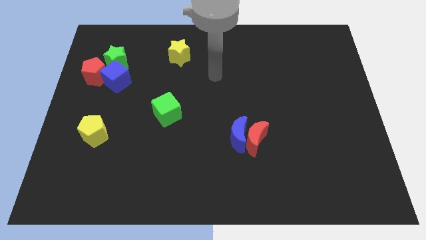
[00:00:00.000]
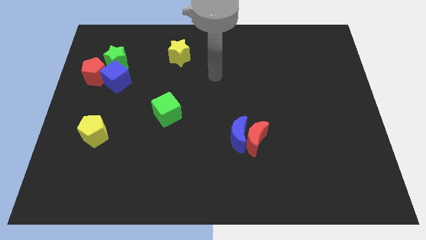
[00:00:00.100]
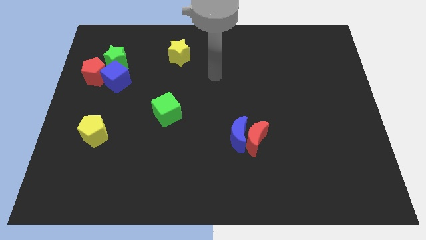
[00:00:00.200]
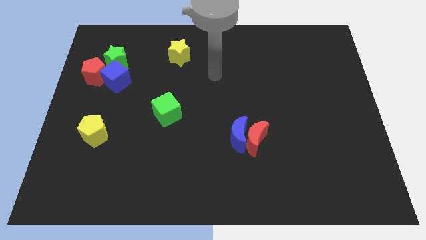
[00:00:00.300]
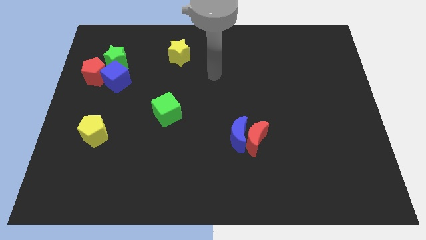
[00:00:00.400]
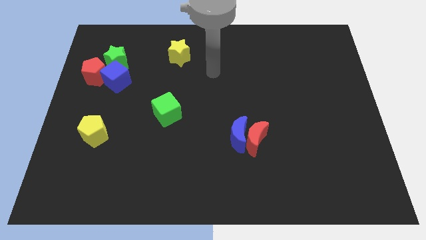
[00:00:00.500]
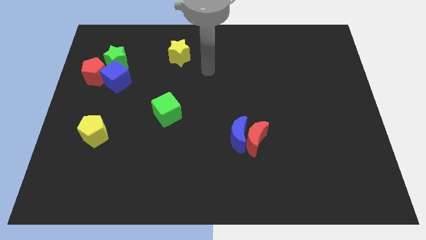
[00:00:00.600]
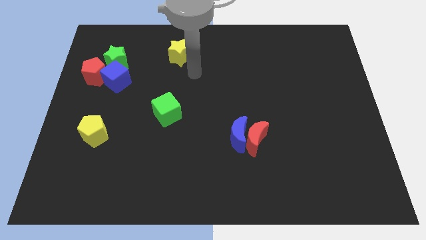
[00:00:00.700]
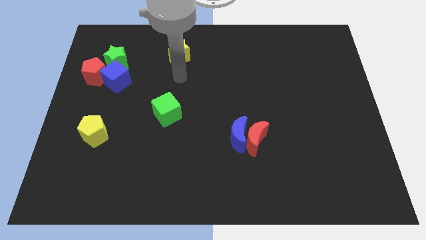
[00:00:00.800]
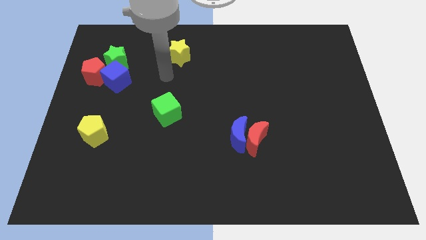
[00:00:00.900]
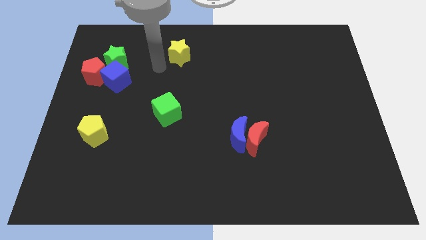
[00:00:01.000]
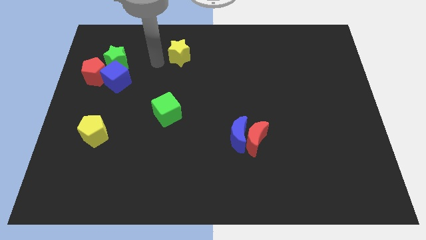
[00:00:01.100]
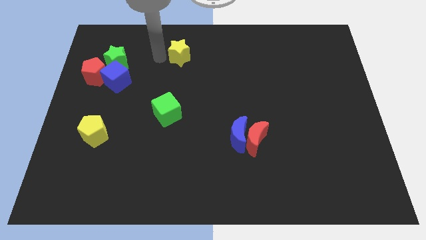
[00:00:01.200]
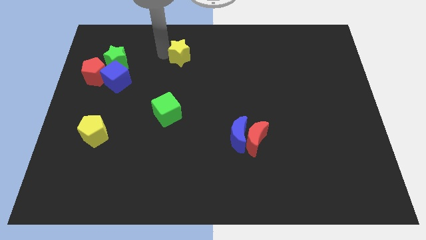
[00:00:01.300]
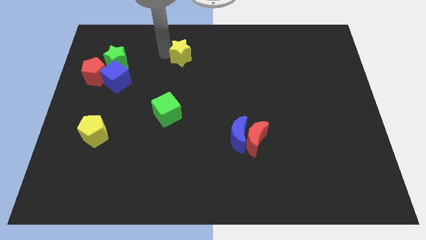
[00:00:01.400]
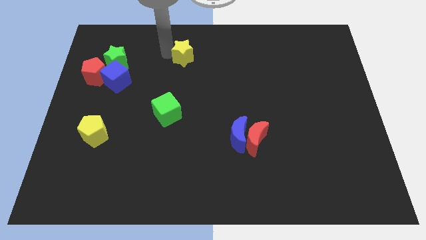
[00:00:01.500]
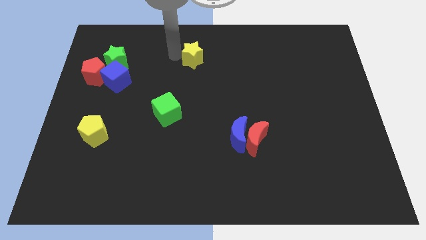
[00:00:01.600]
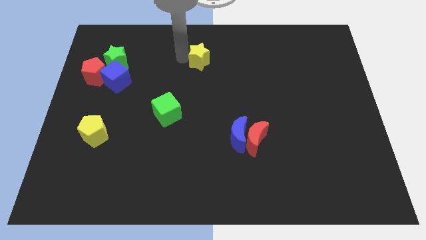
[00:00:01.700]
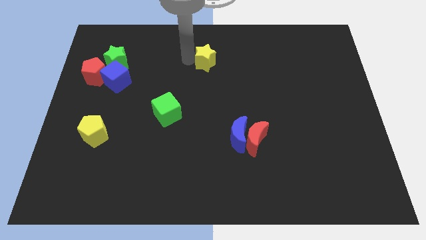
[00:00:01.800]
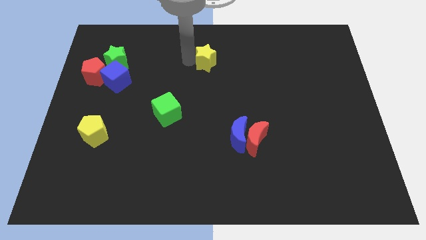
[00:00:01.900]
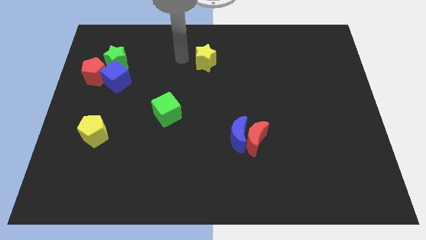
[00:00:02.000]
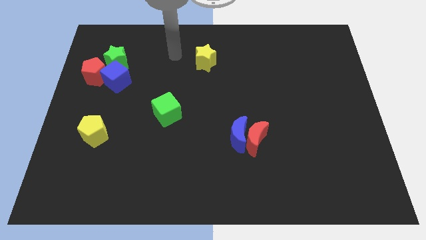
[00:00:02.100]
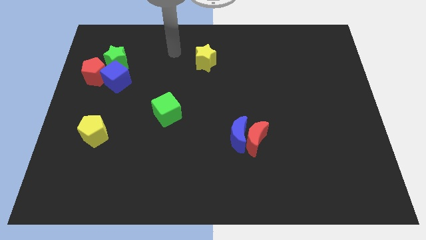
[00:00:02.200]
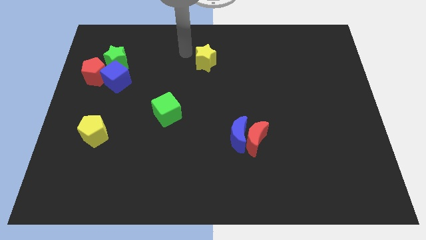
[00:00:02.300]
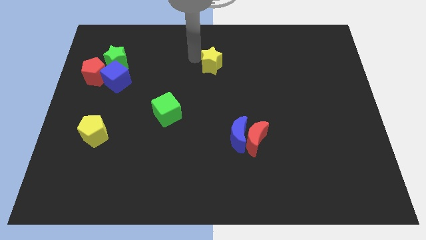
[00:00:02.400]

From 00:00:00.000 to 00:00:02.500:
push the yellow star slightly to the right

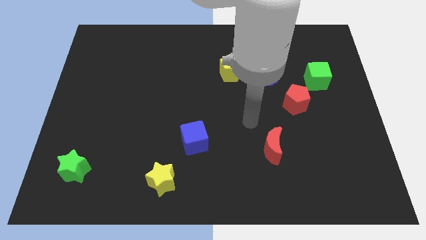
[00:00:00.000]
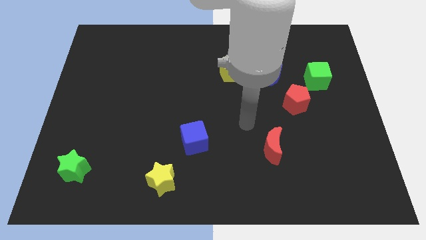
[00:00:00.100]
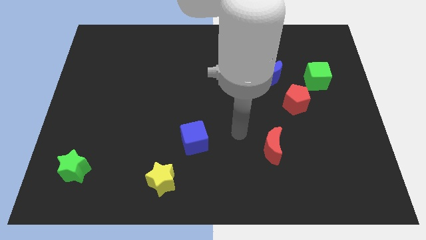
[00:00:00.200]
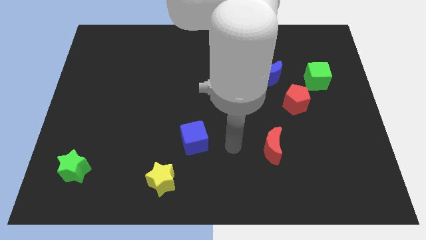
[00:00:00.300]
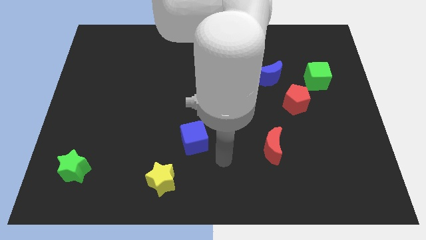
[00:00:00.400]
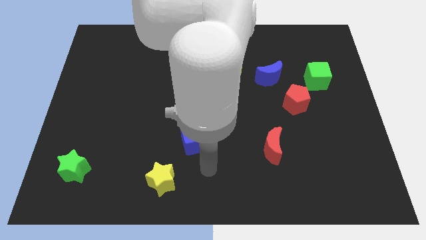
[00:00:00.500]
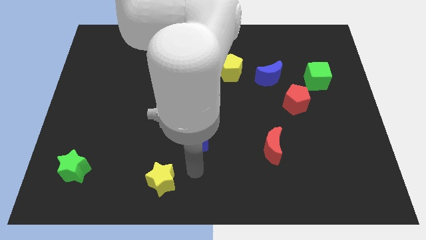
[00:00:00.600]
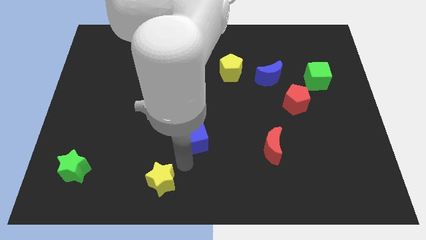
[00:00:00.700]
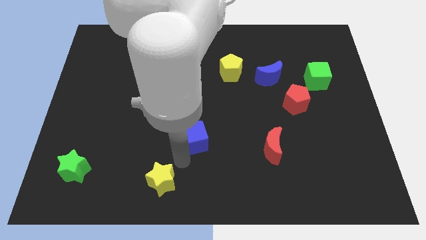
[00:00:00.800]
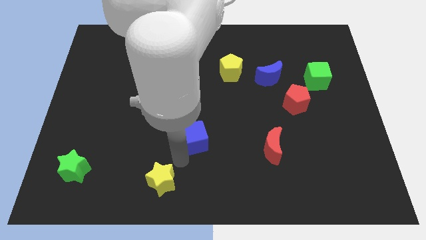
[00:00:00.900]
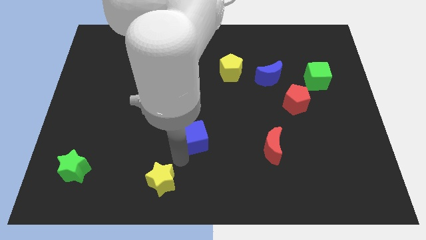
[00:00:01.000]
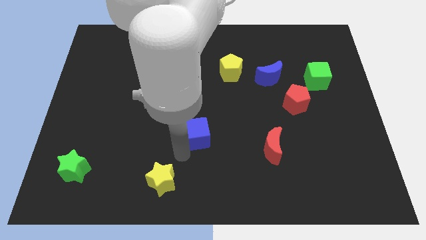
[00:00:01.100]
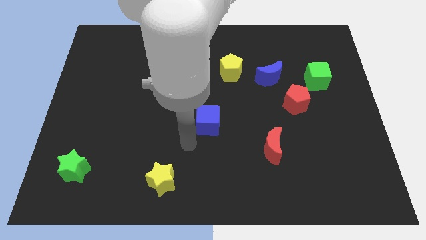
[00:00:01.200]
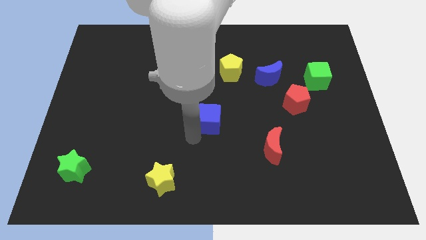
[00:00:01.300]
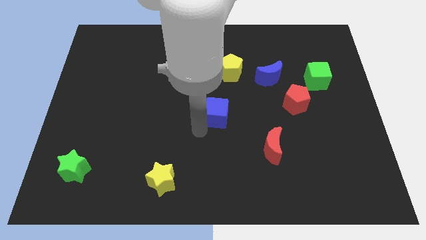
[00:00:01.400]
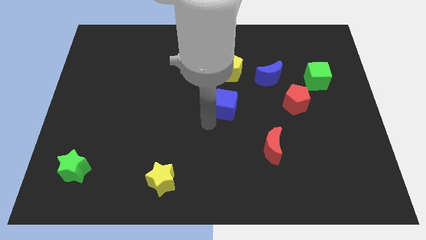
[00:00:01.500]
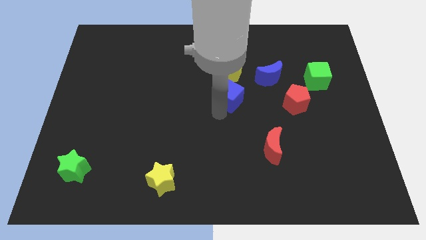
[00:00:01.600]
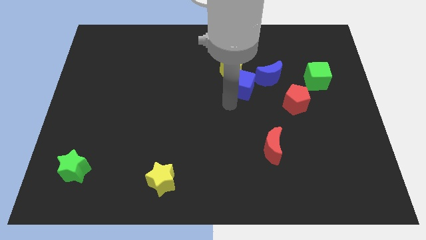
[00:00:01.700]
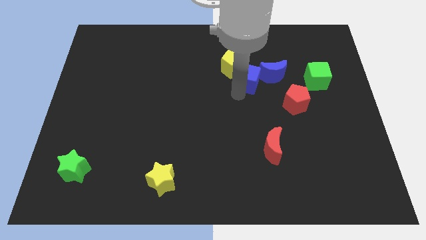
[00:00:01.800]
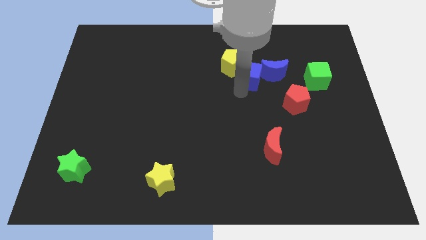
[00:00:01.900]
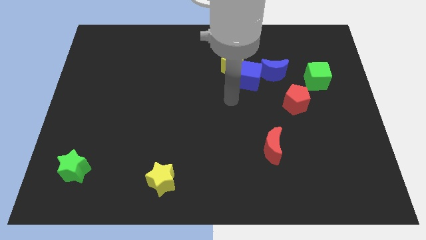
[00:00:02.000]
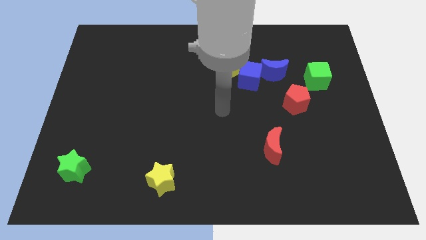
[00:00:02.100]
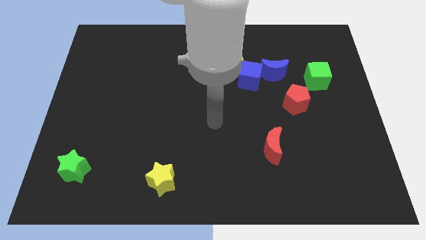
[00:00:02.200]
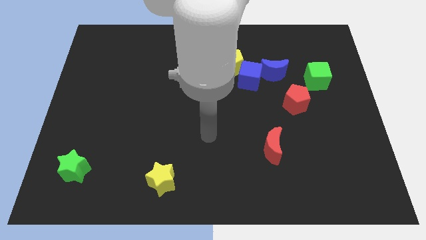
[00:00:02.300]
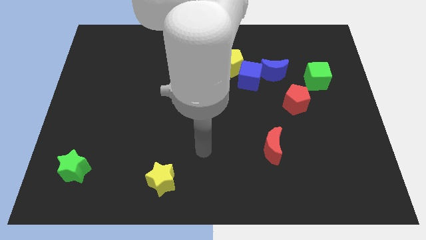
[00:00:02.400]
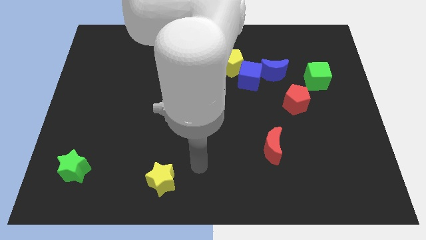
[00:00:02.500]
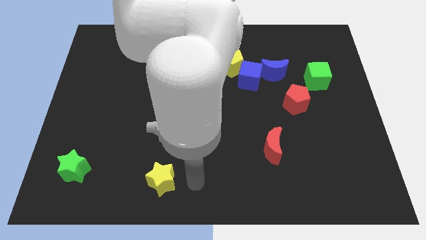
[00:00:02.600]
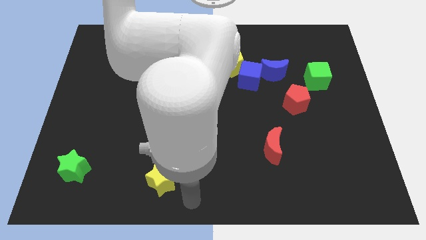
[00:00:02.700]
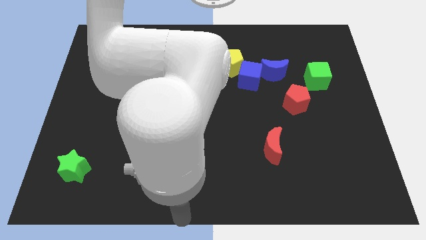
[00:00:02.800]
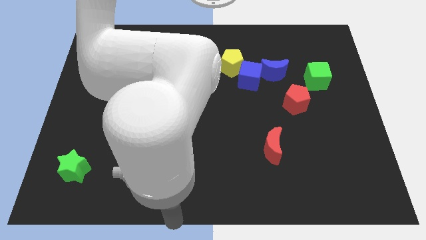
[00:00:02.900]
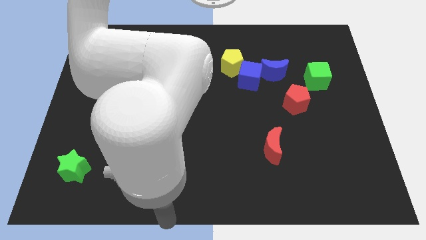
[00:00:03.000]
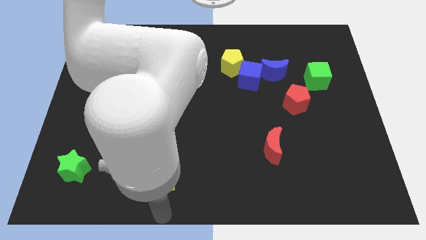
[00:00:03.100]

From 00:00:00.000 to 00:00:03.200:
move the blue cube to the top of the board

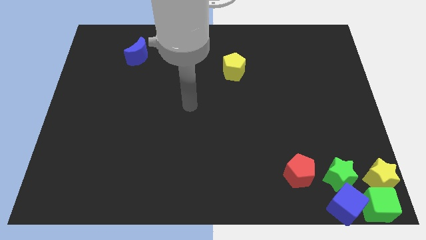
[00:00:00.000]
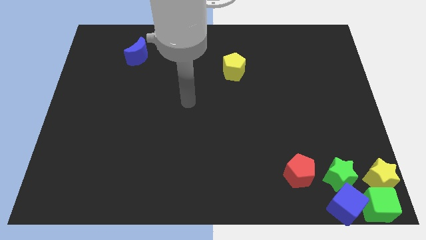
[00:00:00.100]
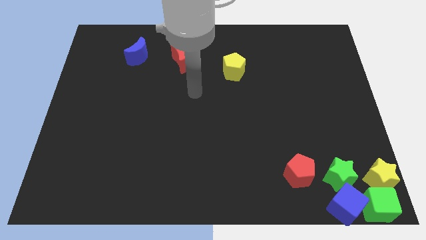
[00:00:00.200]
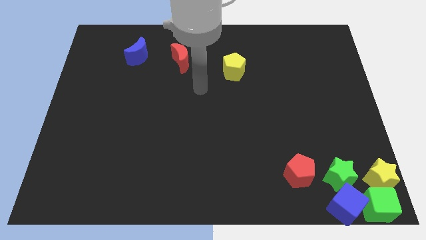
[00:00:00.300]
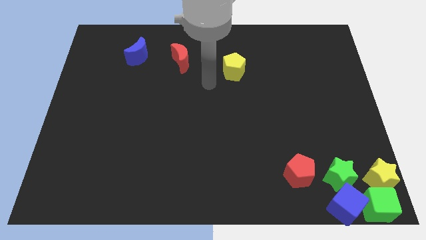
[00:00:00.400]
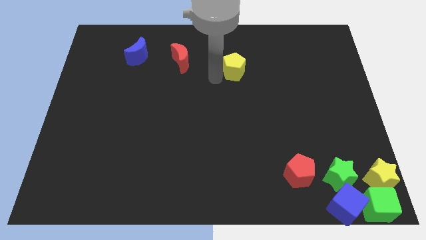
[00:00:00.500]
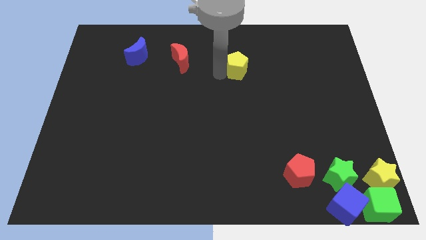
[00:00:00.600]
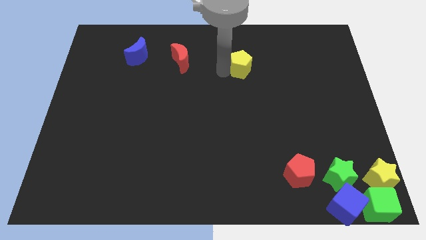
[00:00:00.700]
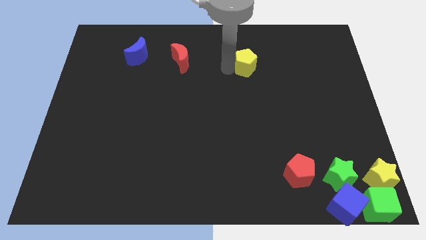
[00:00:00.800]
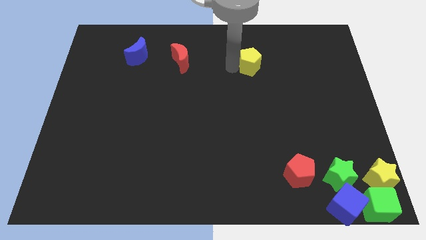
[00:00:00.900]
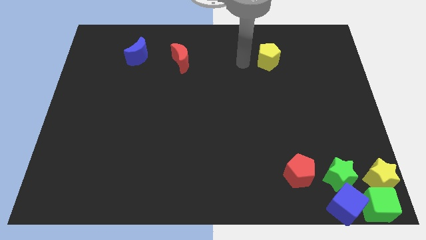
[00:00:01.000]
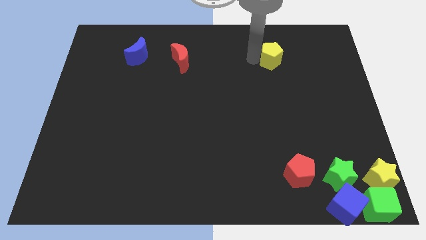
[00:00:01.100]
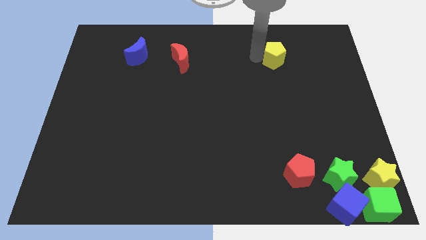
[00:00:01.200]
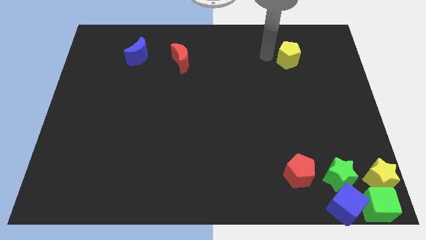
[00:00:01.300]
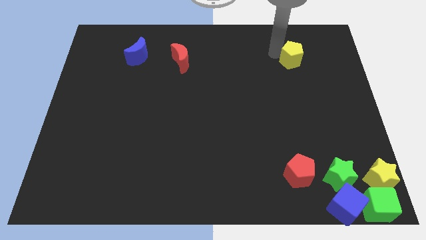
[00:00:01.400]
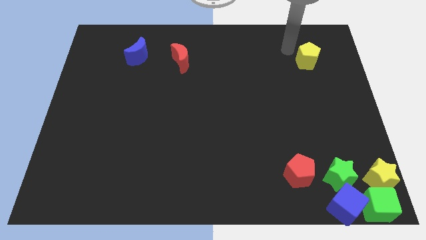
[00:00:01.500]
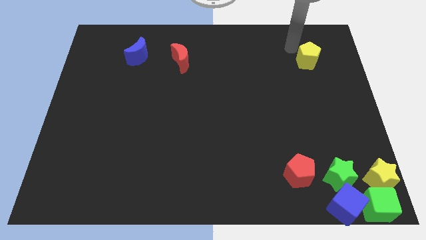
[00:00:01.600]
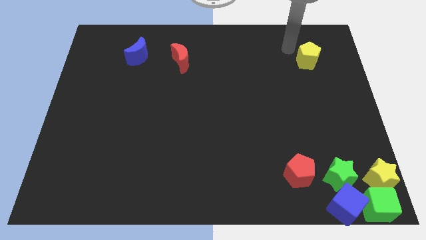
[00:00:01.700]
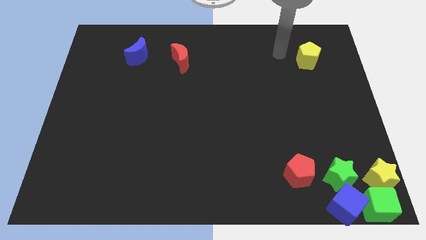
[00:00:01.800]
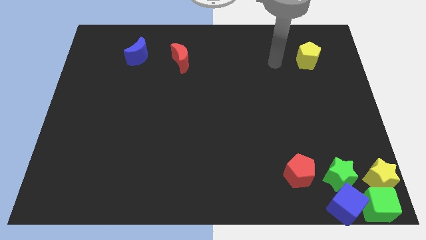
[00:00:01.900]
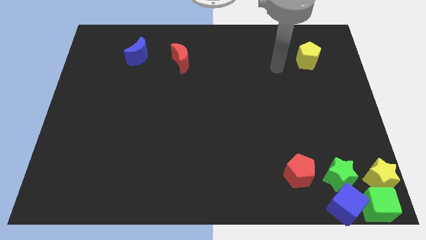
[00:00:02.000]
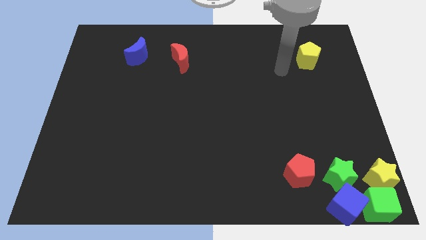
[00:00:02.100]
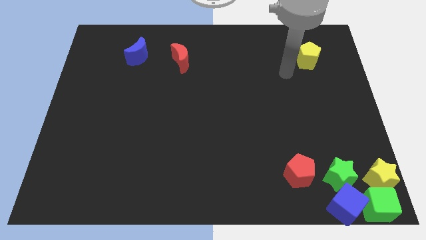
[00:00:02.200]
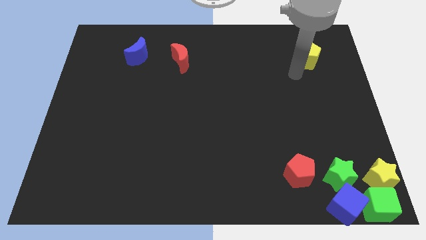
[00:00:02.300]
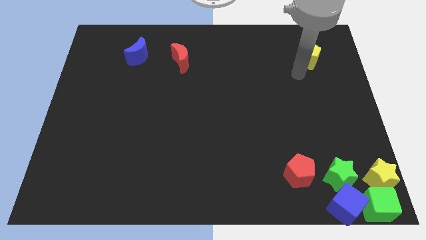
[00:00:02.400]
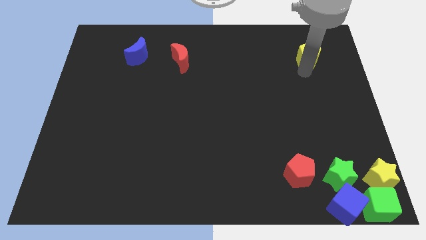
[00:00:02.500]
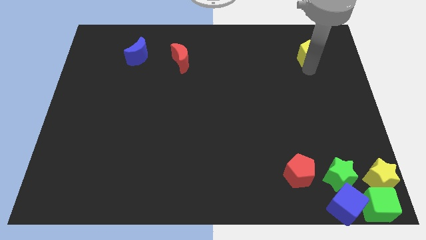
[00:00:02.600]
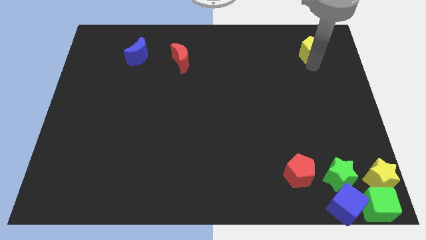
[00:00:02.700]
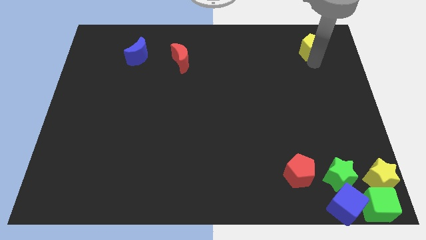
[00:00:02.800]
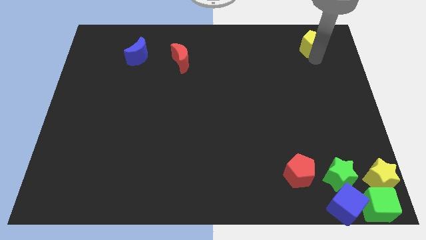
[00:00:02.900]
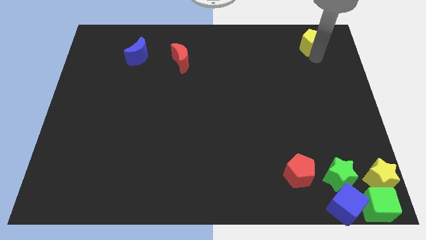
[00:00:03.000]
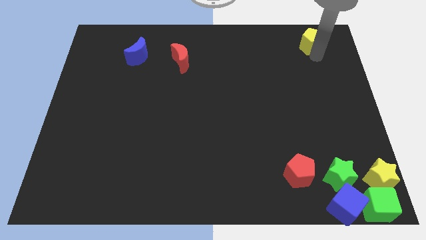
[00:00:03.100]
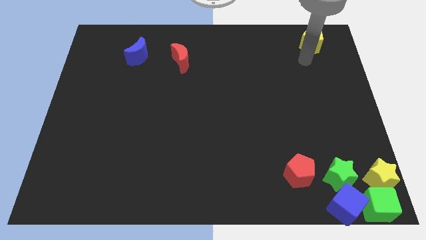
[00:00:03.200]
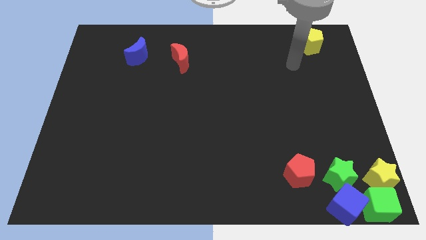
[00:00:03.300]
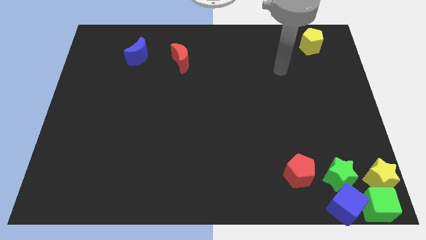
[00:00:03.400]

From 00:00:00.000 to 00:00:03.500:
move the yellow pentagon to the top right side of the table
